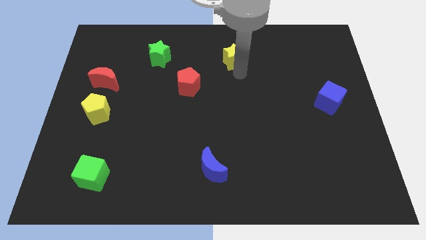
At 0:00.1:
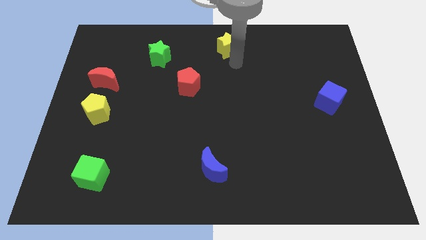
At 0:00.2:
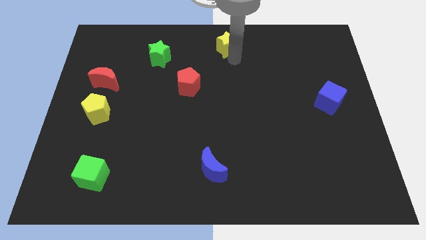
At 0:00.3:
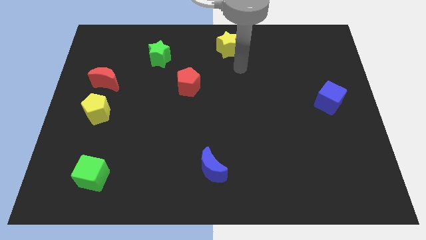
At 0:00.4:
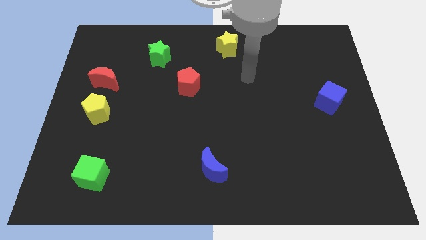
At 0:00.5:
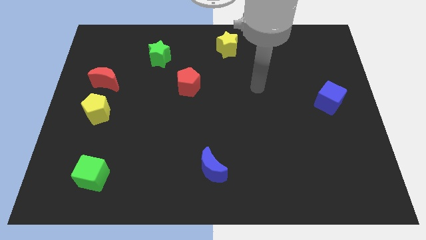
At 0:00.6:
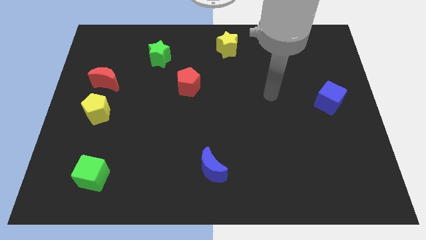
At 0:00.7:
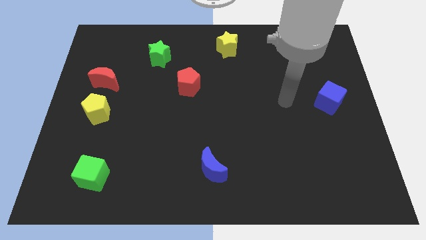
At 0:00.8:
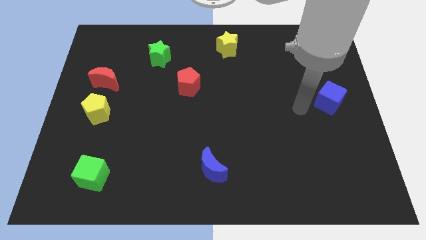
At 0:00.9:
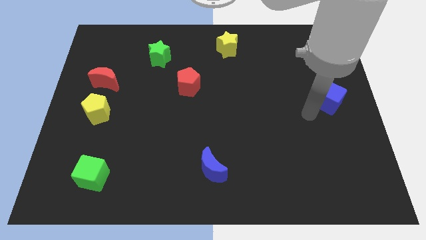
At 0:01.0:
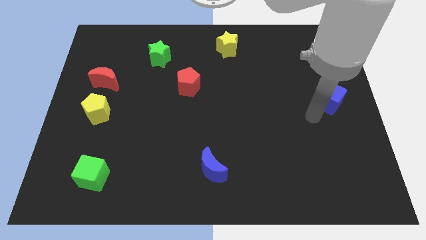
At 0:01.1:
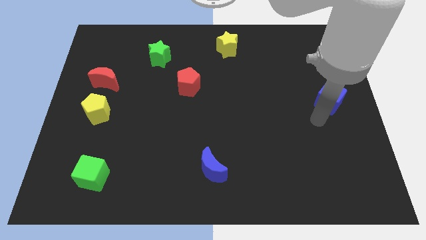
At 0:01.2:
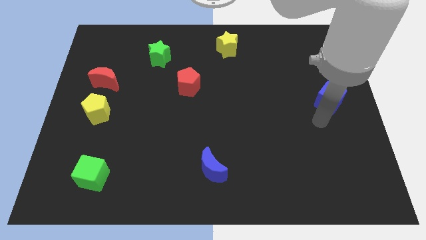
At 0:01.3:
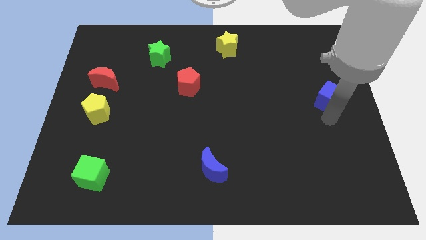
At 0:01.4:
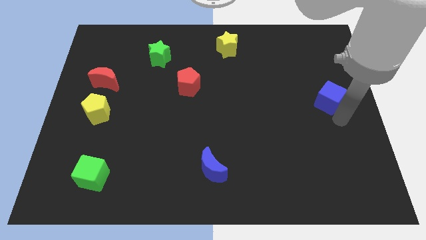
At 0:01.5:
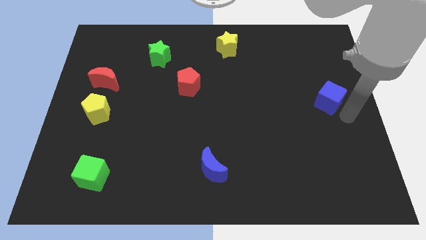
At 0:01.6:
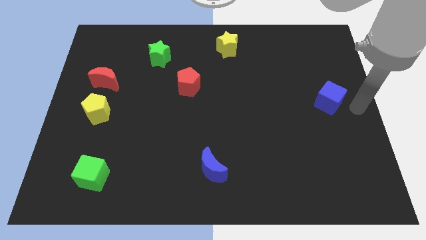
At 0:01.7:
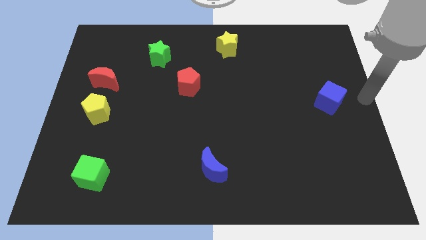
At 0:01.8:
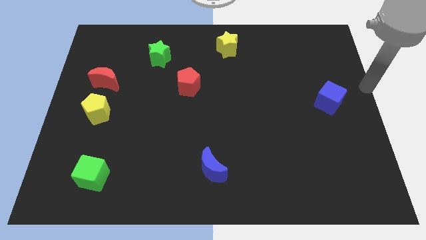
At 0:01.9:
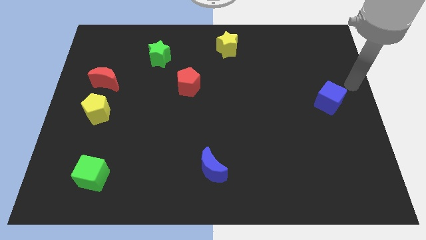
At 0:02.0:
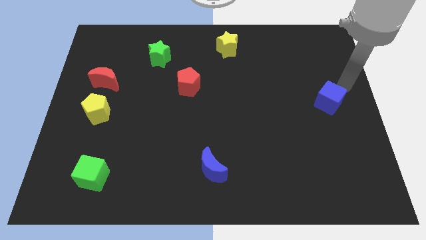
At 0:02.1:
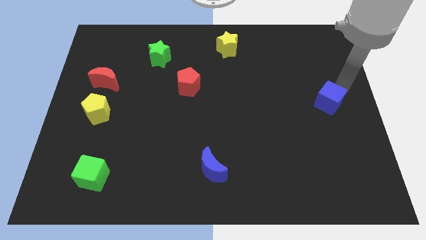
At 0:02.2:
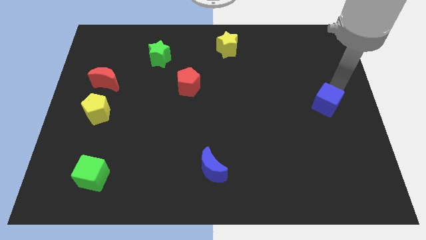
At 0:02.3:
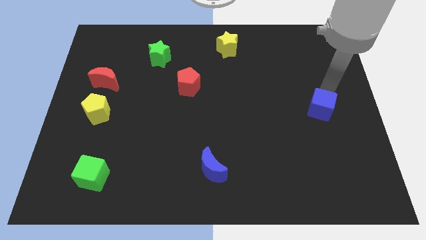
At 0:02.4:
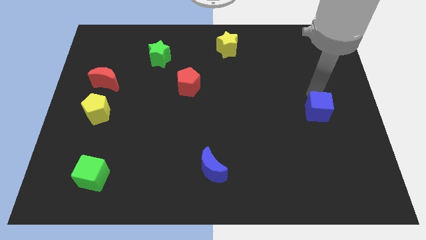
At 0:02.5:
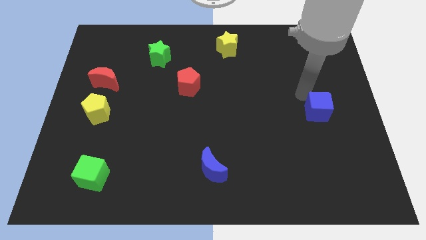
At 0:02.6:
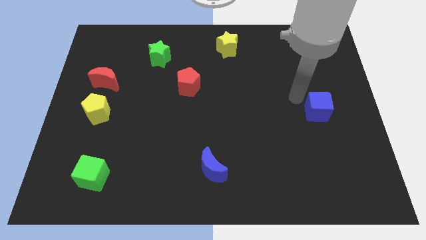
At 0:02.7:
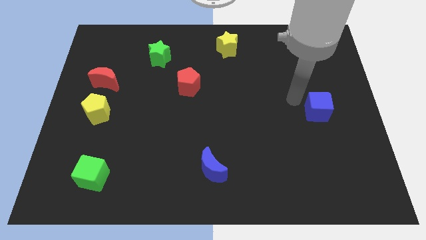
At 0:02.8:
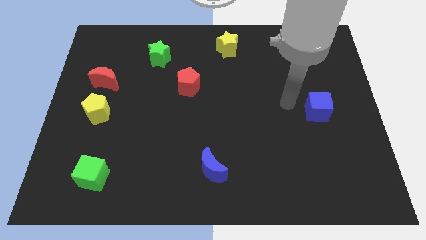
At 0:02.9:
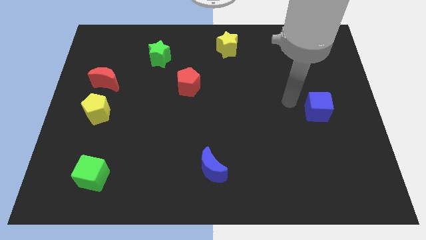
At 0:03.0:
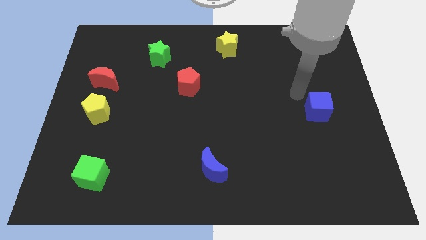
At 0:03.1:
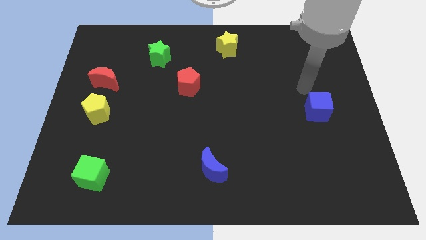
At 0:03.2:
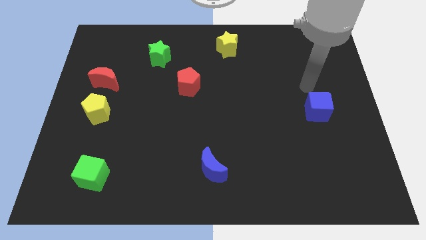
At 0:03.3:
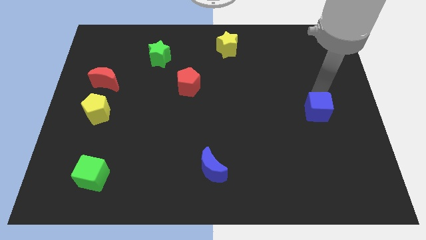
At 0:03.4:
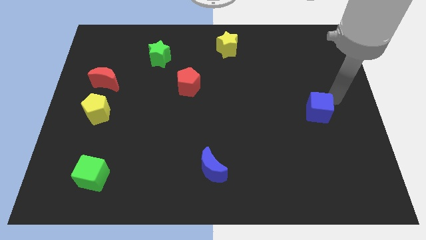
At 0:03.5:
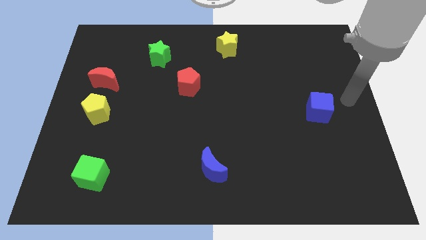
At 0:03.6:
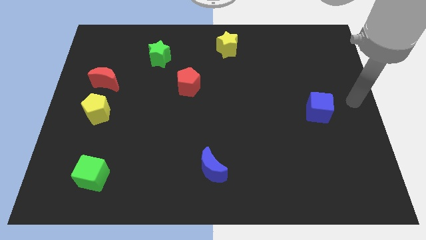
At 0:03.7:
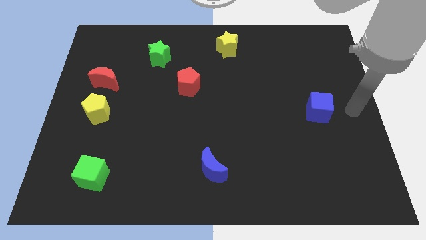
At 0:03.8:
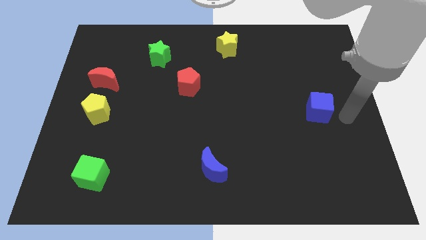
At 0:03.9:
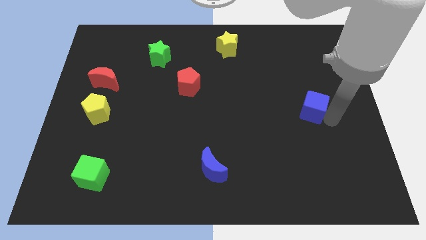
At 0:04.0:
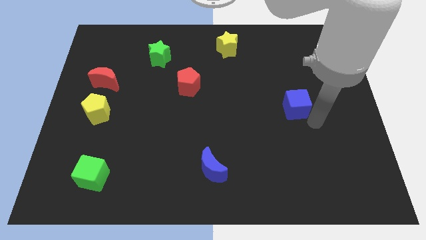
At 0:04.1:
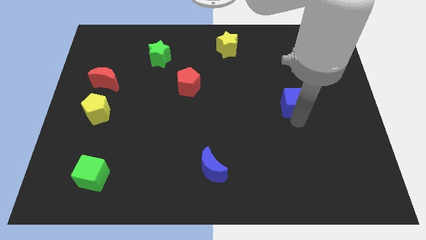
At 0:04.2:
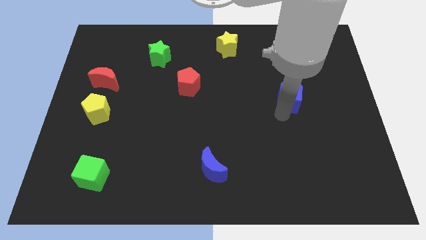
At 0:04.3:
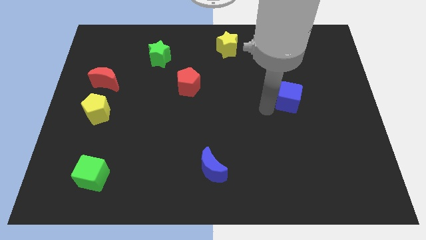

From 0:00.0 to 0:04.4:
put the blue cube diagonally to the blue moon

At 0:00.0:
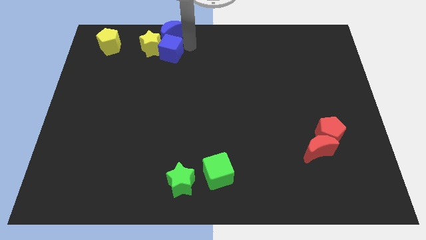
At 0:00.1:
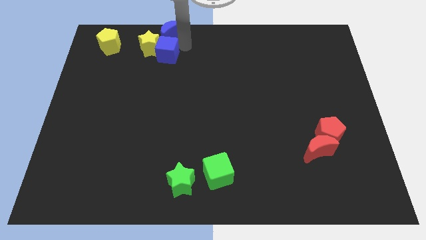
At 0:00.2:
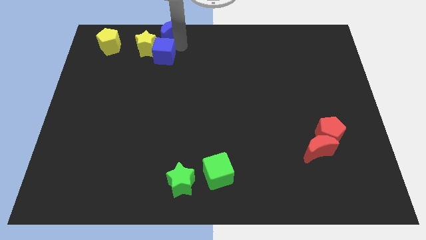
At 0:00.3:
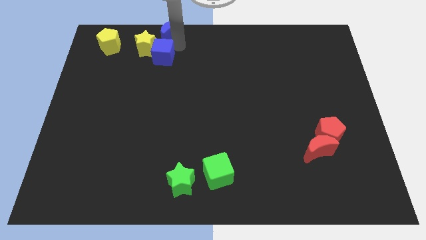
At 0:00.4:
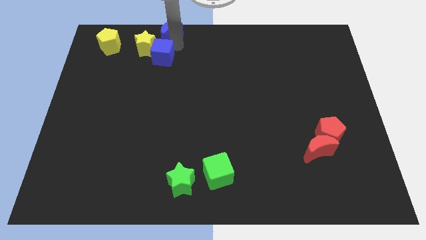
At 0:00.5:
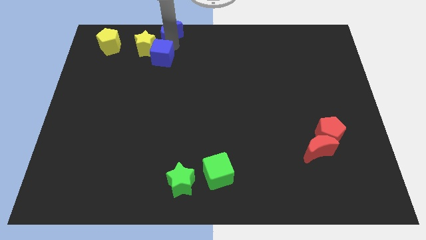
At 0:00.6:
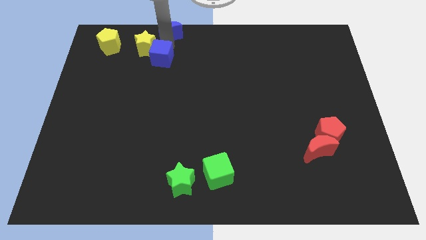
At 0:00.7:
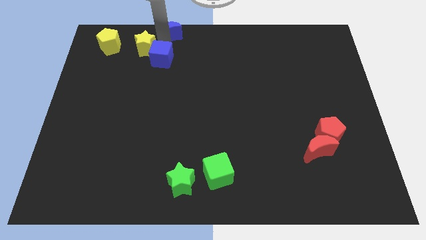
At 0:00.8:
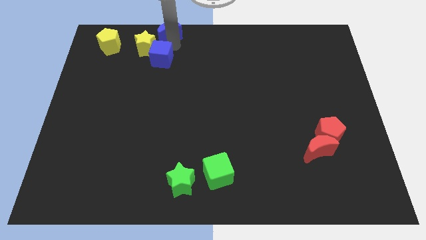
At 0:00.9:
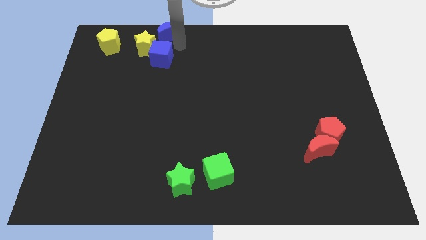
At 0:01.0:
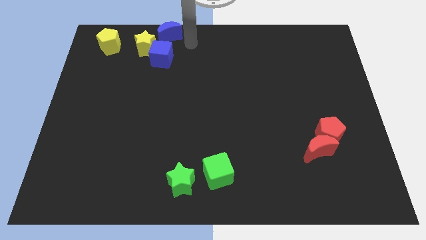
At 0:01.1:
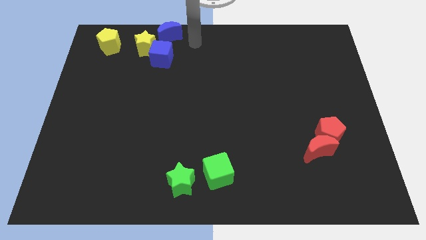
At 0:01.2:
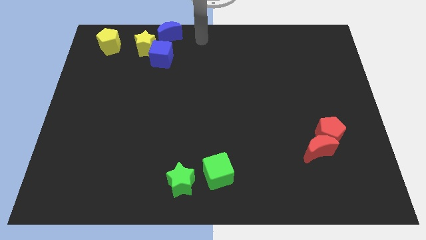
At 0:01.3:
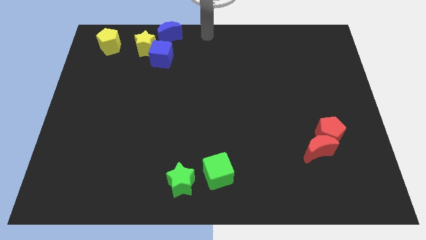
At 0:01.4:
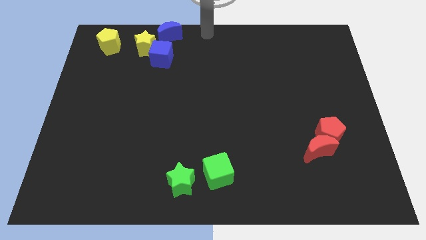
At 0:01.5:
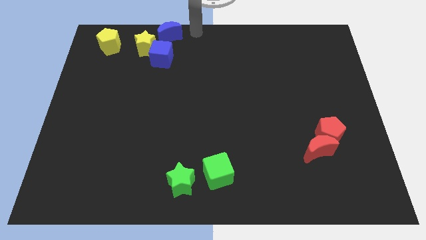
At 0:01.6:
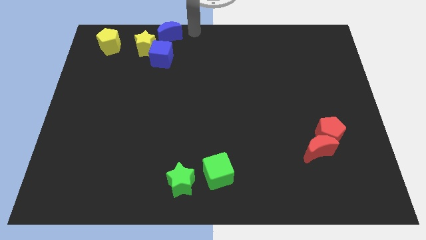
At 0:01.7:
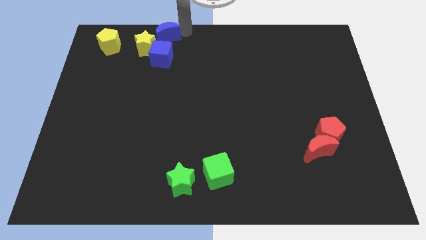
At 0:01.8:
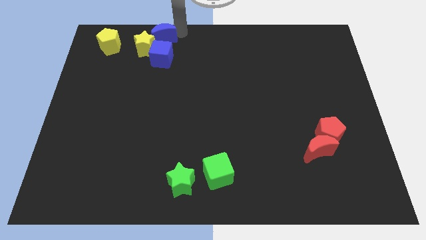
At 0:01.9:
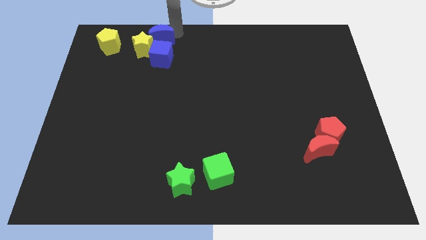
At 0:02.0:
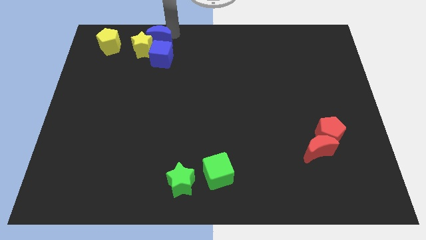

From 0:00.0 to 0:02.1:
push the yellow star with the blue cube

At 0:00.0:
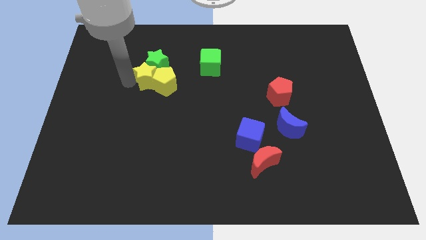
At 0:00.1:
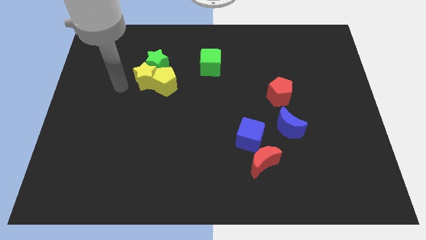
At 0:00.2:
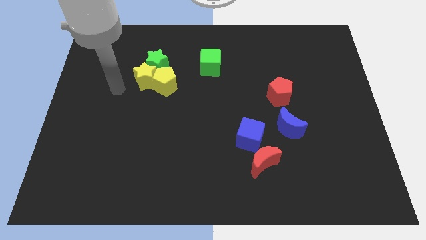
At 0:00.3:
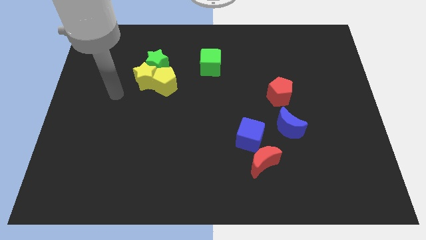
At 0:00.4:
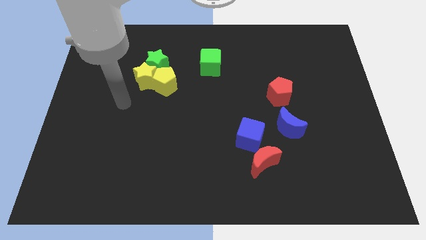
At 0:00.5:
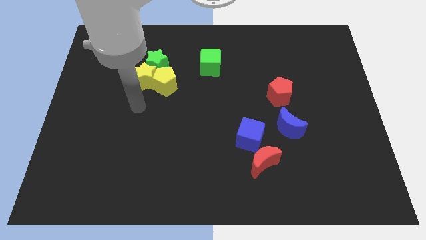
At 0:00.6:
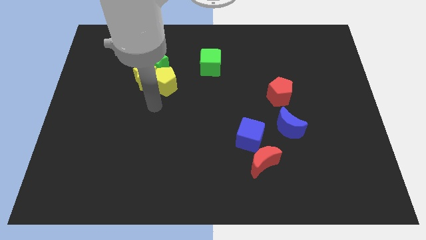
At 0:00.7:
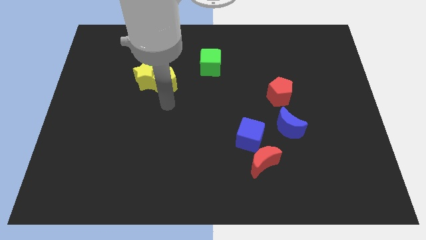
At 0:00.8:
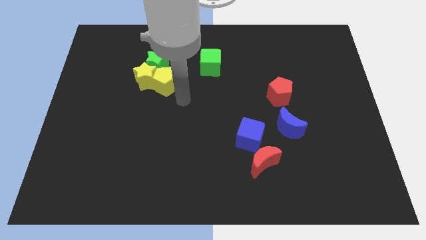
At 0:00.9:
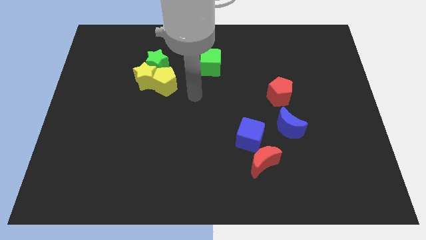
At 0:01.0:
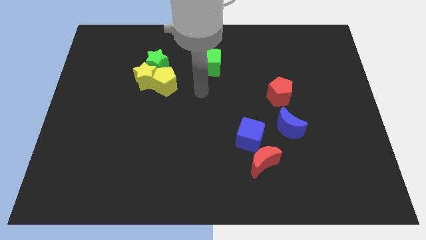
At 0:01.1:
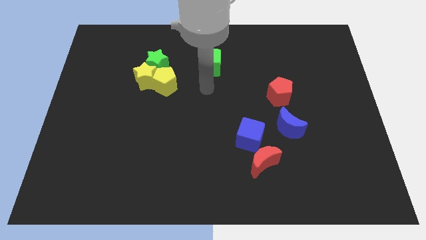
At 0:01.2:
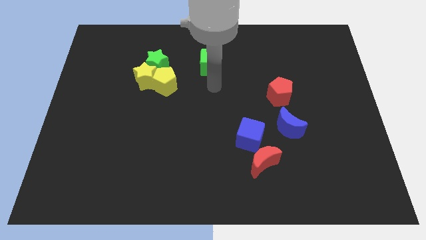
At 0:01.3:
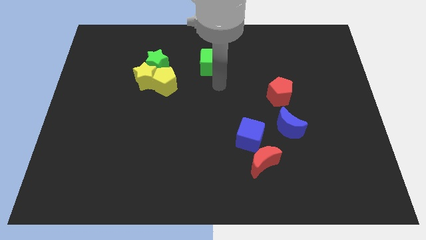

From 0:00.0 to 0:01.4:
go away from the yellow star

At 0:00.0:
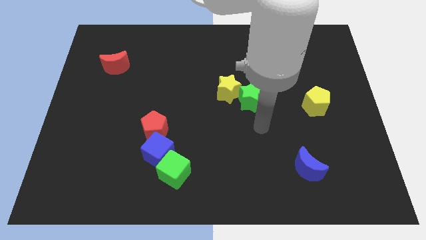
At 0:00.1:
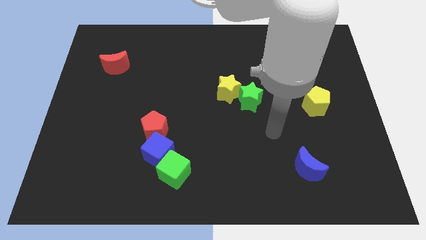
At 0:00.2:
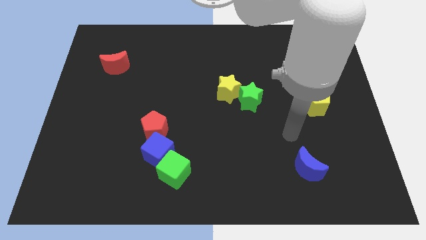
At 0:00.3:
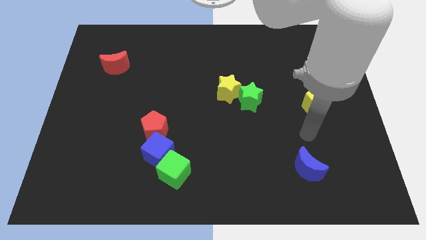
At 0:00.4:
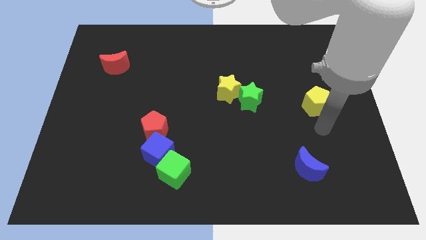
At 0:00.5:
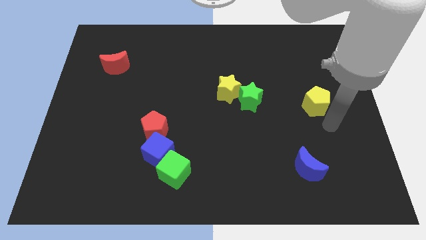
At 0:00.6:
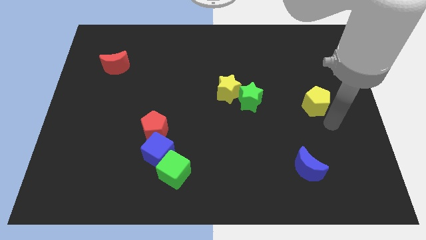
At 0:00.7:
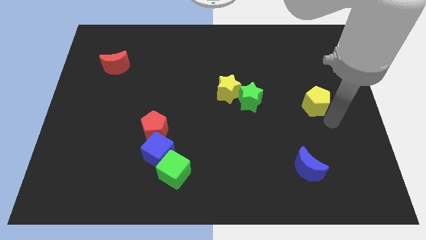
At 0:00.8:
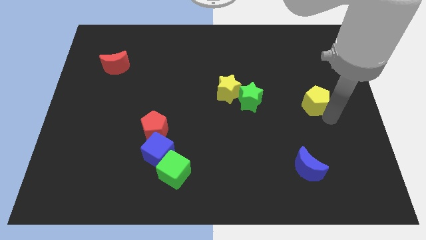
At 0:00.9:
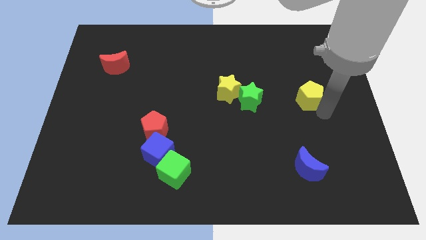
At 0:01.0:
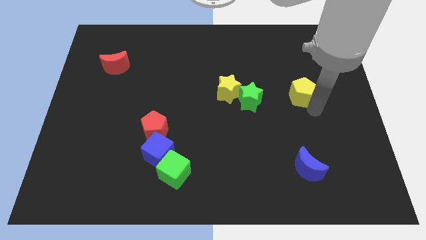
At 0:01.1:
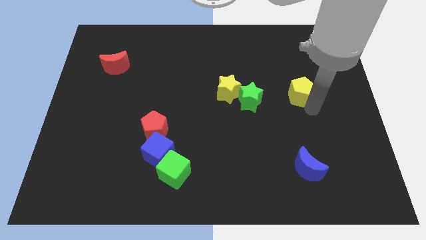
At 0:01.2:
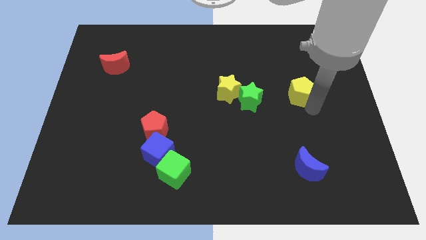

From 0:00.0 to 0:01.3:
move your arm away from green star
